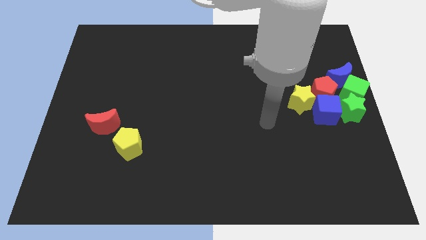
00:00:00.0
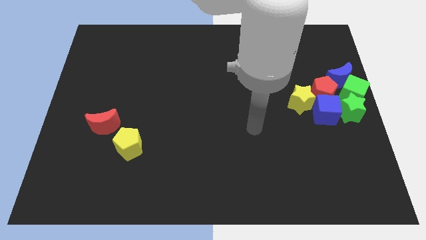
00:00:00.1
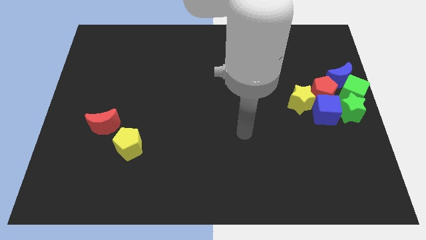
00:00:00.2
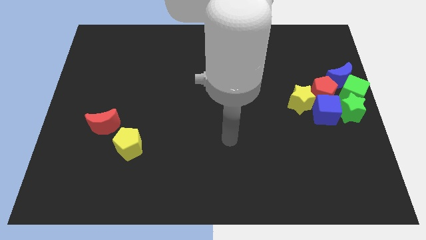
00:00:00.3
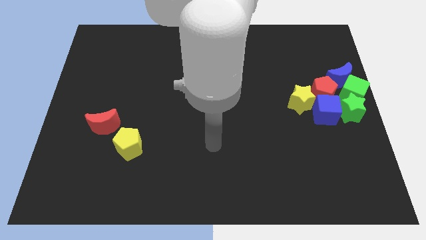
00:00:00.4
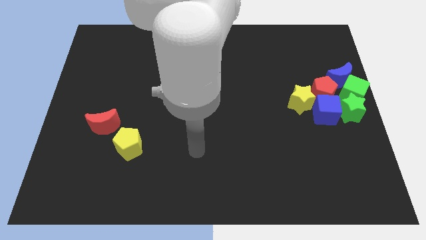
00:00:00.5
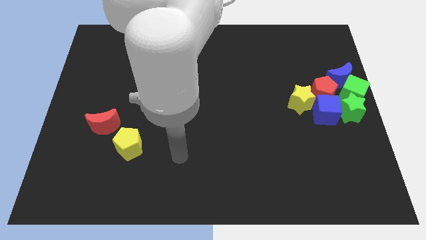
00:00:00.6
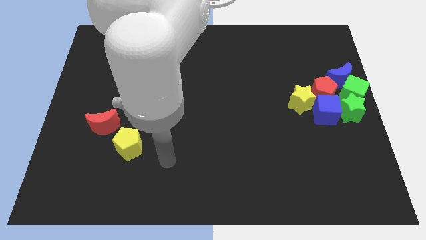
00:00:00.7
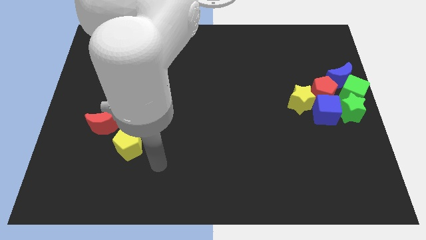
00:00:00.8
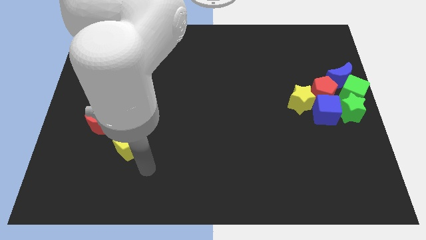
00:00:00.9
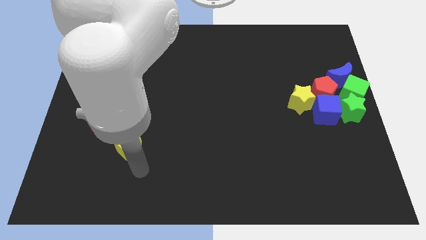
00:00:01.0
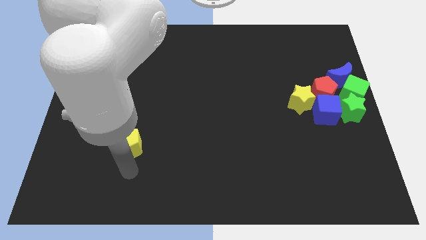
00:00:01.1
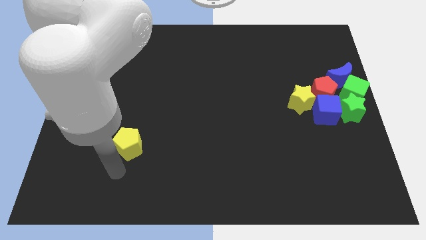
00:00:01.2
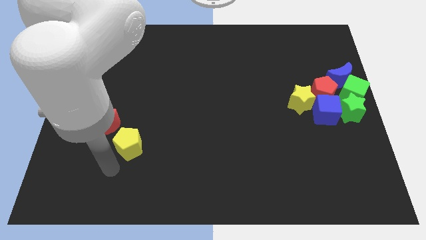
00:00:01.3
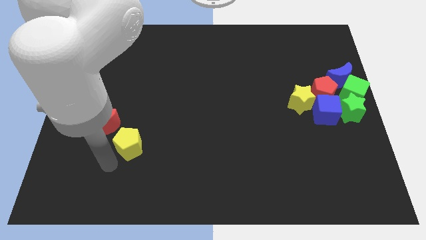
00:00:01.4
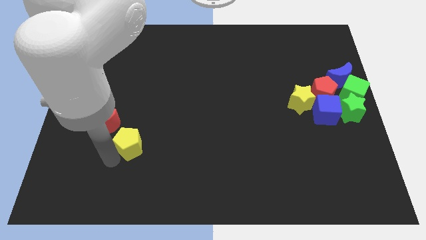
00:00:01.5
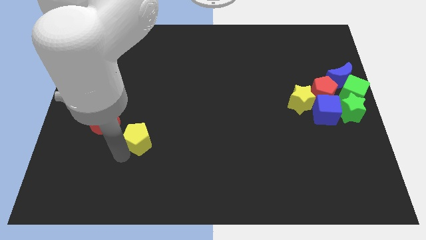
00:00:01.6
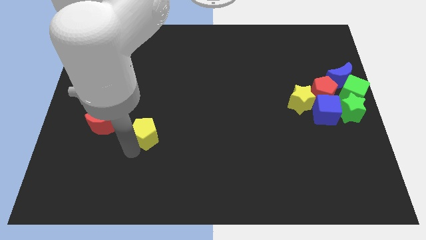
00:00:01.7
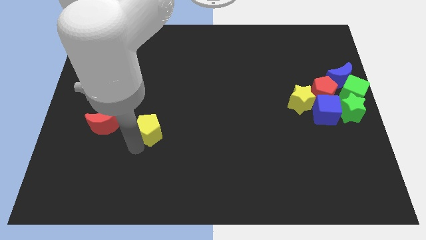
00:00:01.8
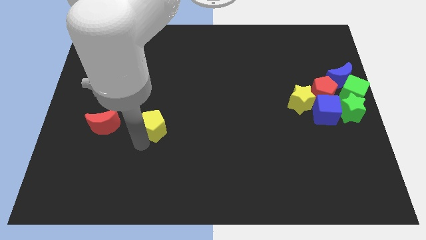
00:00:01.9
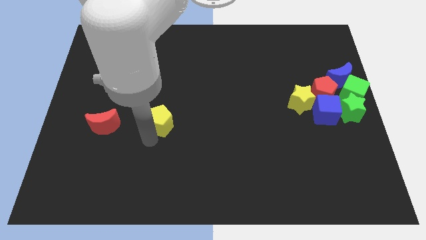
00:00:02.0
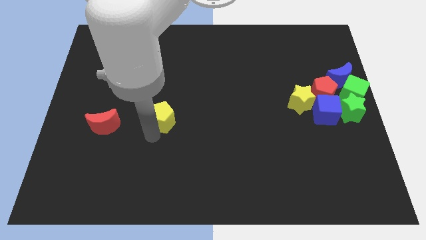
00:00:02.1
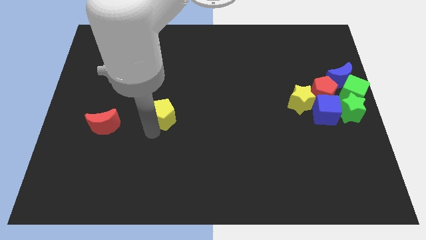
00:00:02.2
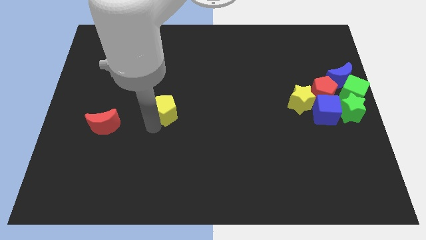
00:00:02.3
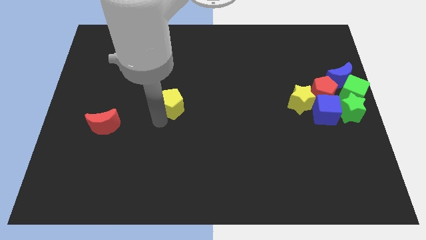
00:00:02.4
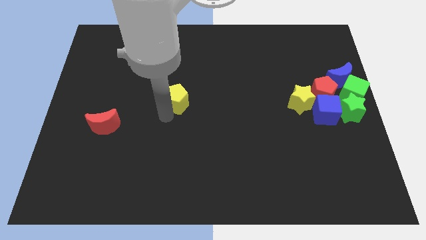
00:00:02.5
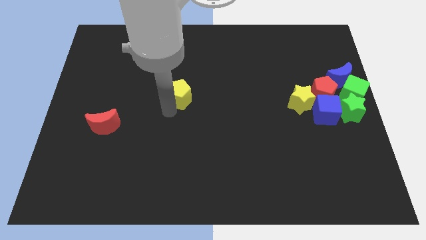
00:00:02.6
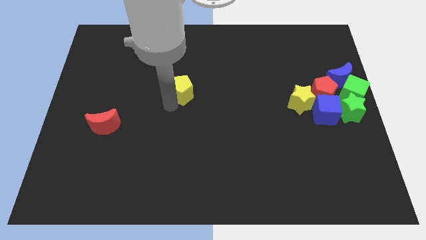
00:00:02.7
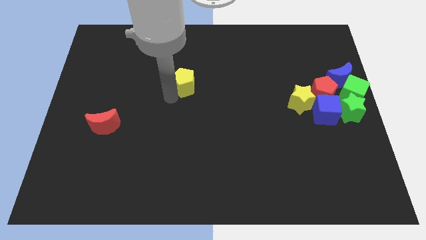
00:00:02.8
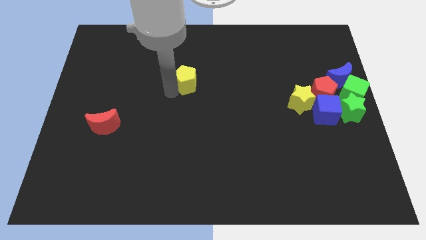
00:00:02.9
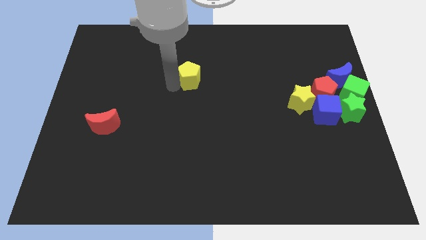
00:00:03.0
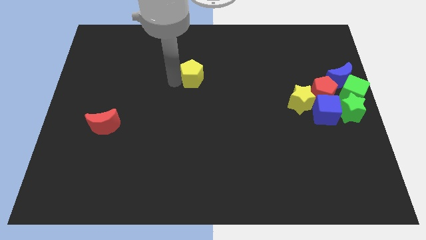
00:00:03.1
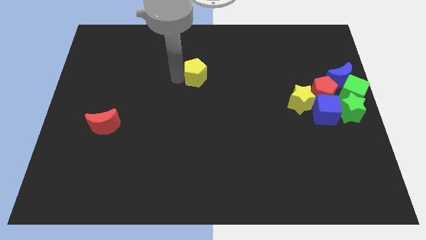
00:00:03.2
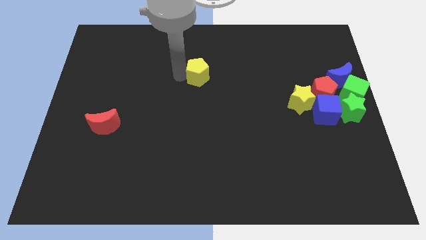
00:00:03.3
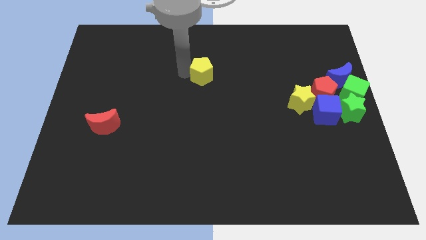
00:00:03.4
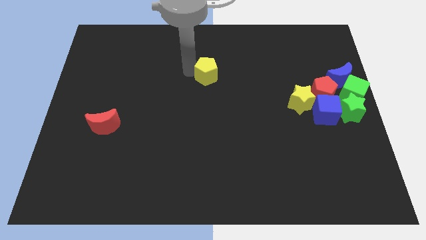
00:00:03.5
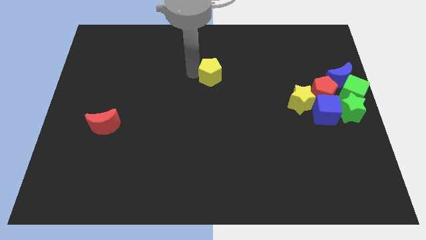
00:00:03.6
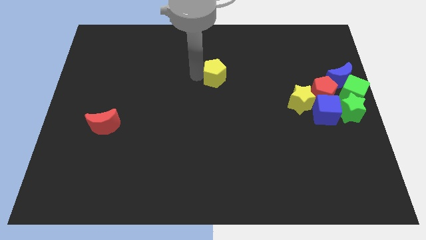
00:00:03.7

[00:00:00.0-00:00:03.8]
move the yellow pentagon opposite to the red crescent

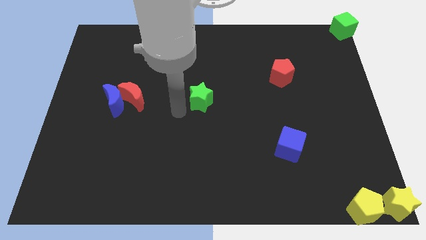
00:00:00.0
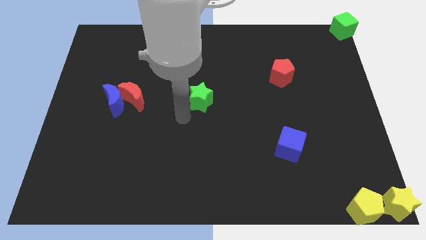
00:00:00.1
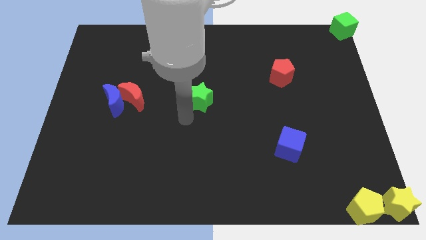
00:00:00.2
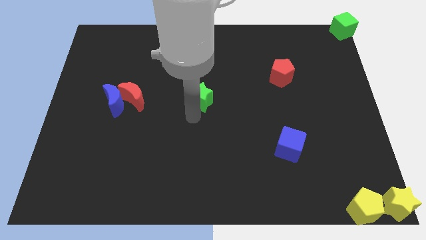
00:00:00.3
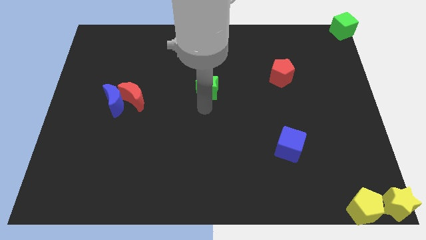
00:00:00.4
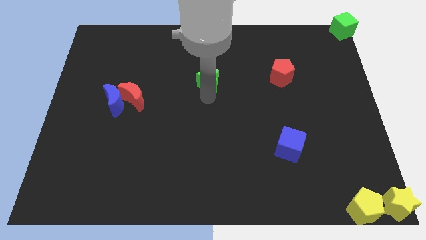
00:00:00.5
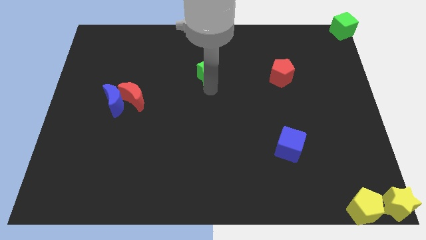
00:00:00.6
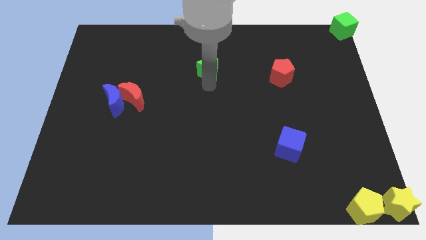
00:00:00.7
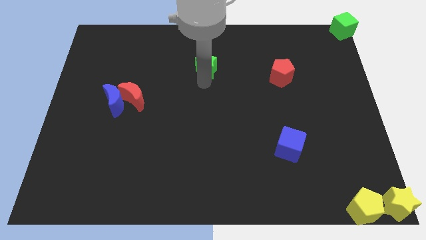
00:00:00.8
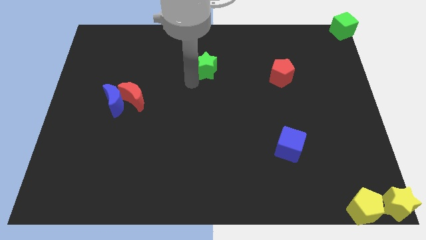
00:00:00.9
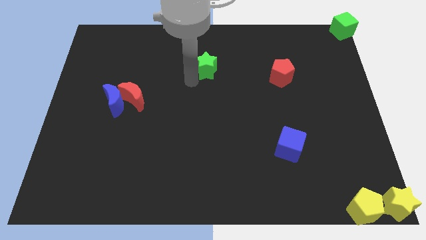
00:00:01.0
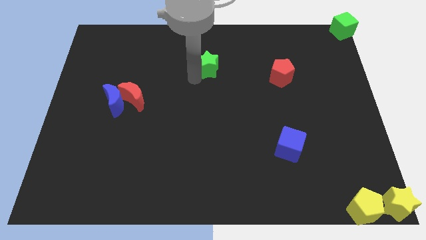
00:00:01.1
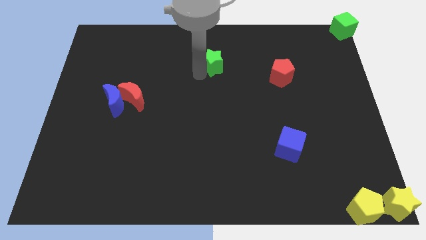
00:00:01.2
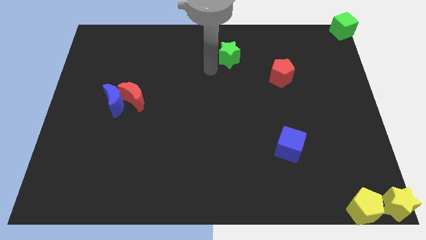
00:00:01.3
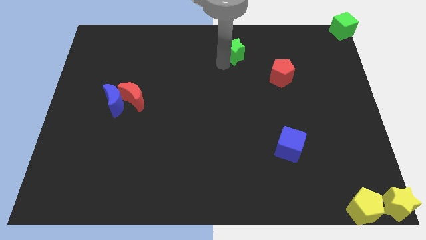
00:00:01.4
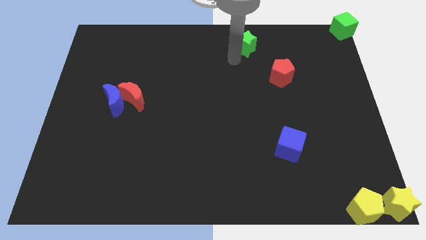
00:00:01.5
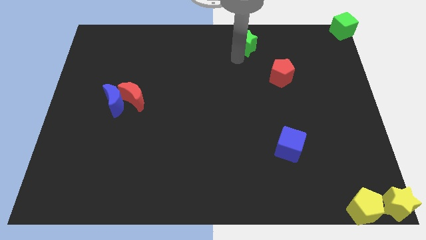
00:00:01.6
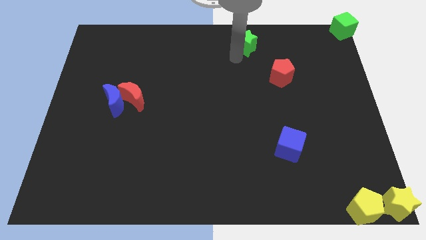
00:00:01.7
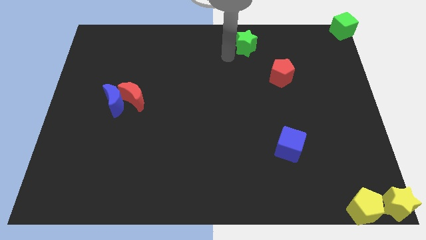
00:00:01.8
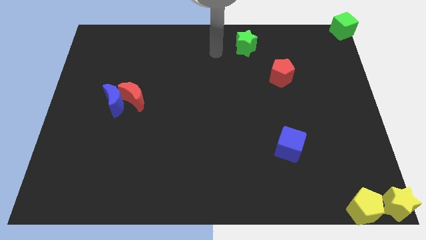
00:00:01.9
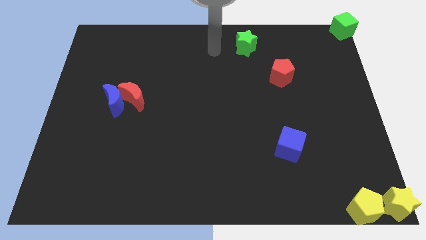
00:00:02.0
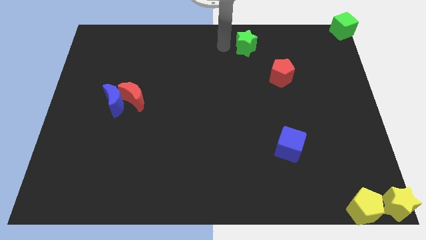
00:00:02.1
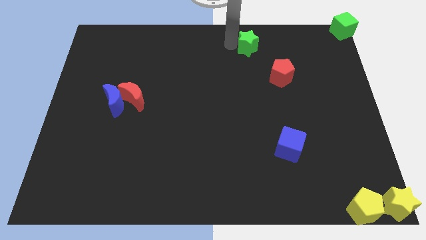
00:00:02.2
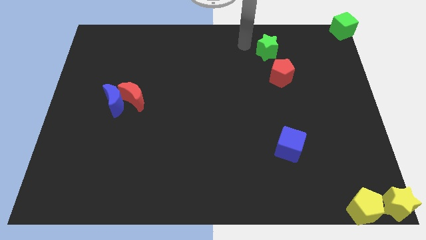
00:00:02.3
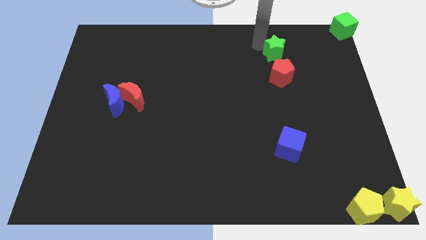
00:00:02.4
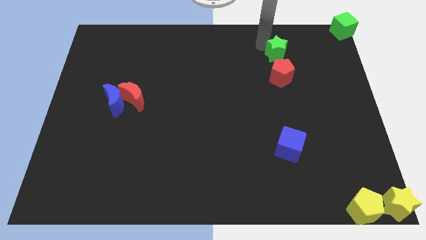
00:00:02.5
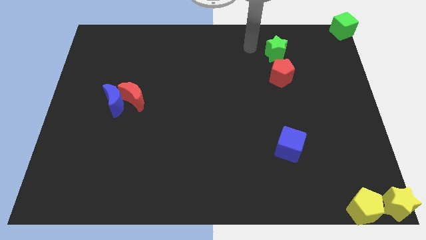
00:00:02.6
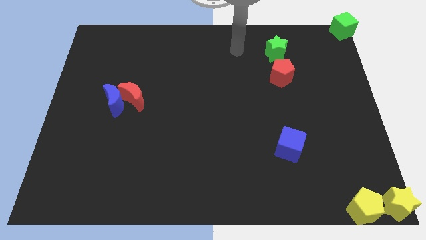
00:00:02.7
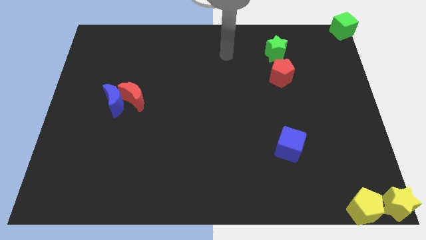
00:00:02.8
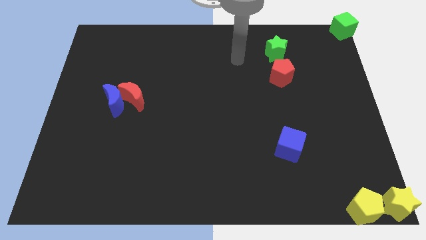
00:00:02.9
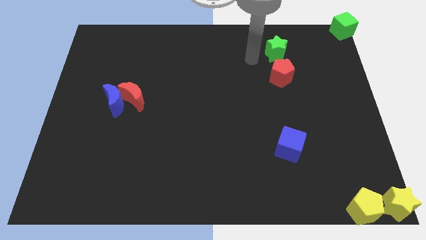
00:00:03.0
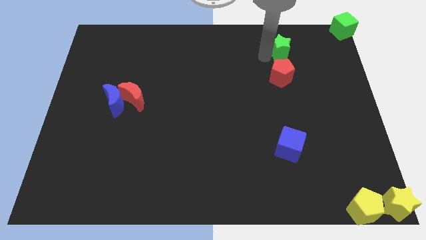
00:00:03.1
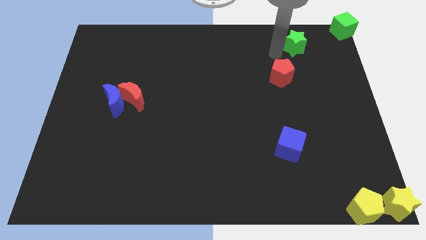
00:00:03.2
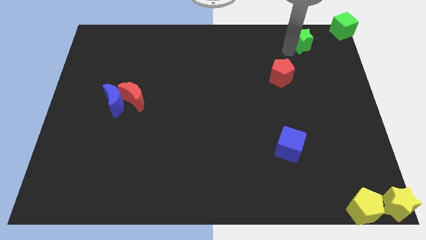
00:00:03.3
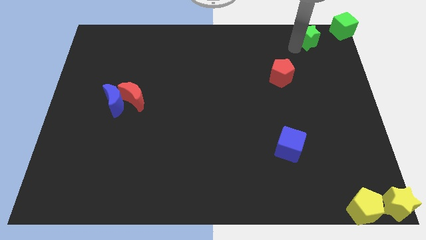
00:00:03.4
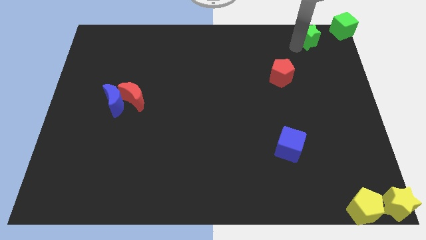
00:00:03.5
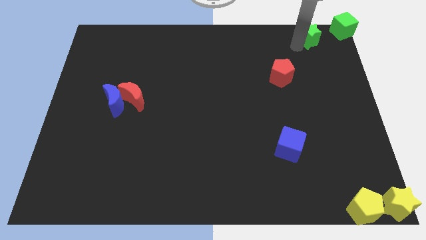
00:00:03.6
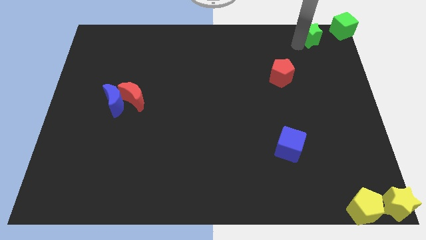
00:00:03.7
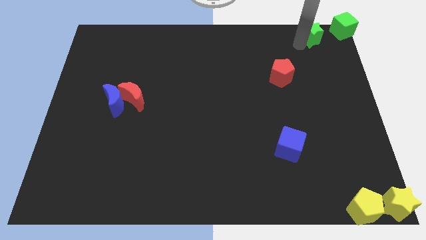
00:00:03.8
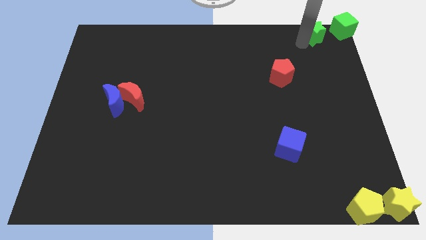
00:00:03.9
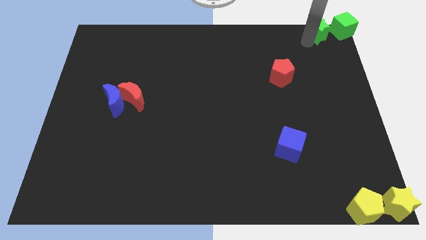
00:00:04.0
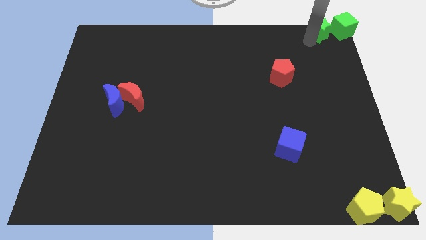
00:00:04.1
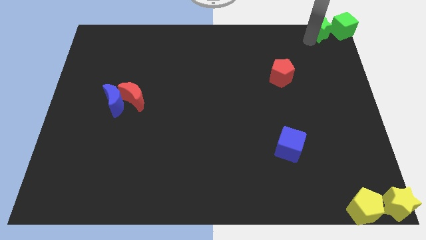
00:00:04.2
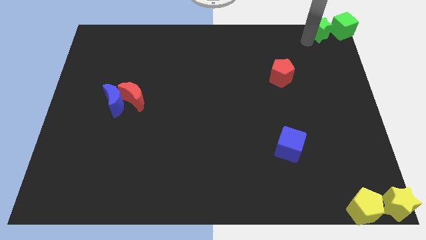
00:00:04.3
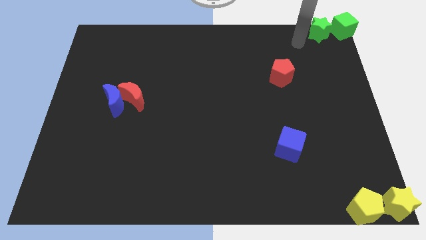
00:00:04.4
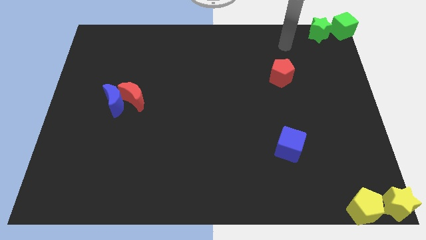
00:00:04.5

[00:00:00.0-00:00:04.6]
move the green star to the right of the green cube

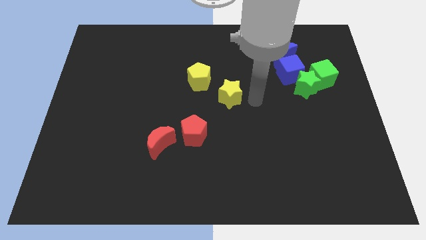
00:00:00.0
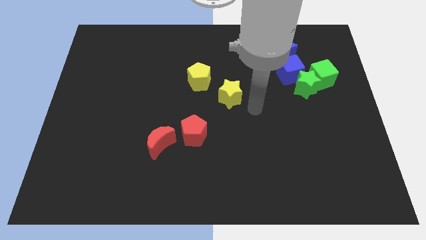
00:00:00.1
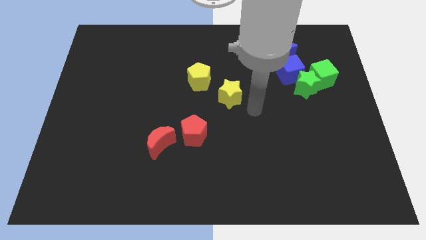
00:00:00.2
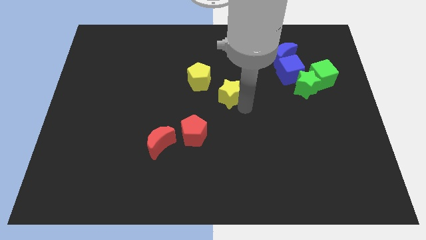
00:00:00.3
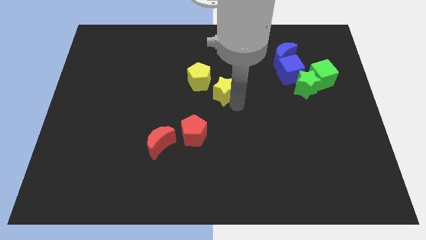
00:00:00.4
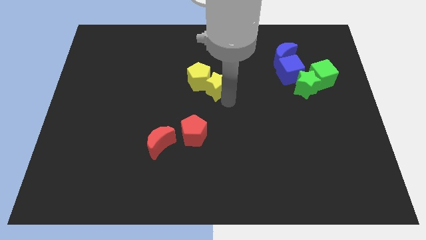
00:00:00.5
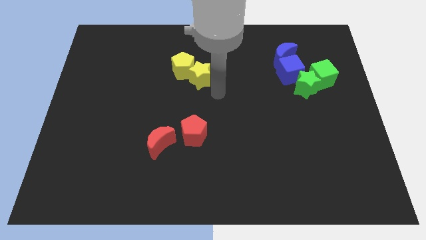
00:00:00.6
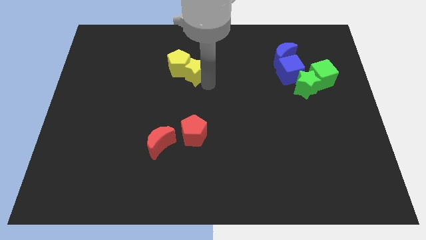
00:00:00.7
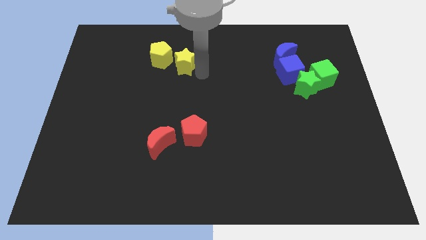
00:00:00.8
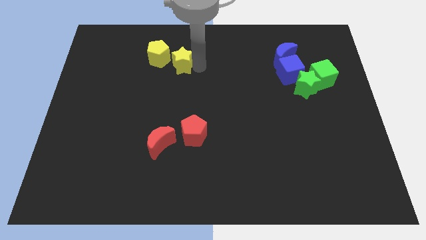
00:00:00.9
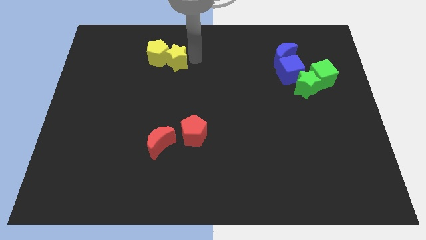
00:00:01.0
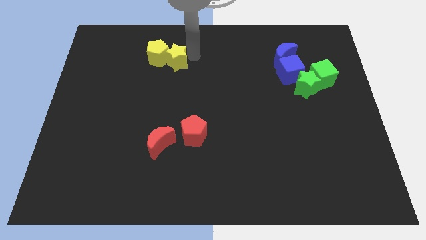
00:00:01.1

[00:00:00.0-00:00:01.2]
push the yellow star along with the yellow pentagon slightly to the top left side of the board
